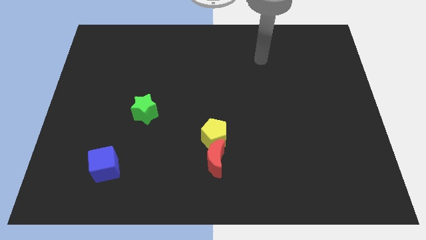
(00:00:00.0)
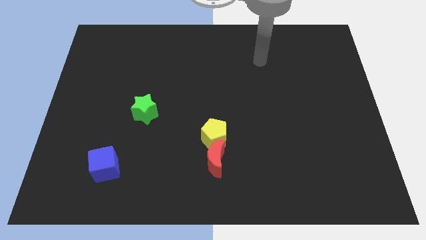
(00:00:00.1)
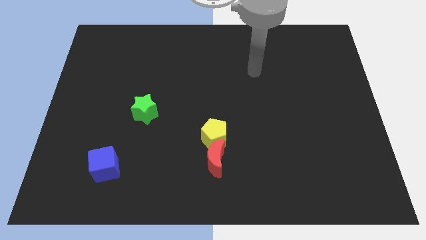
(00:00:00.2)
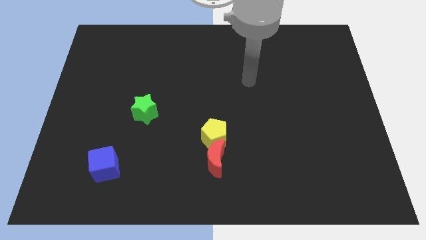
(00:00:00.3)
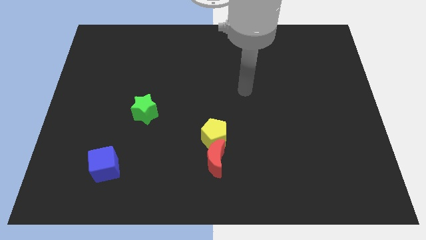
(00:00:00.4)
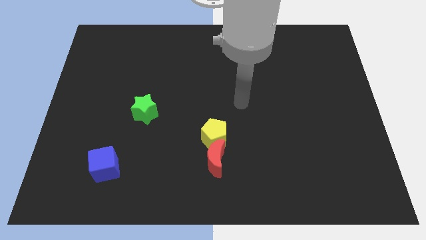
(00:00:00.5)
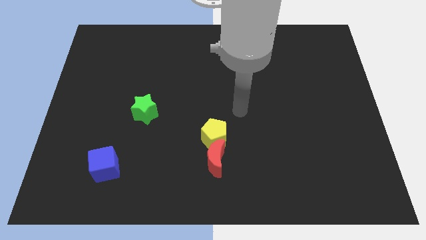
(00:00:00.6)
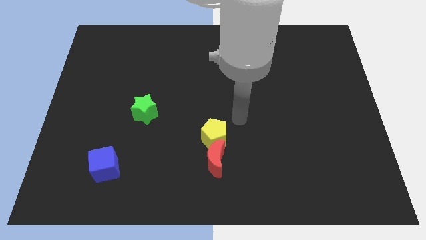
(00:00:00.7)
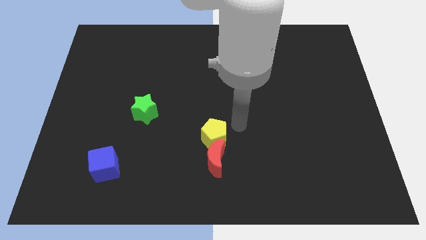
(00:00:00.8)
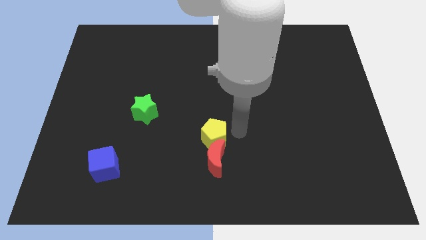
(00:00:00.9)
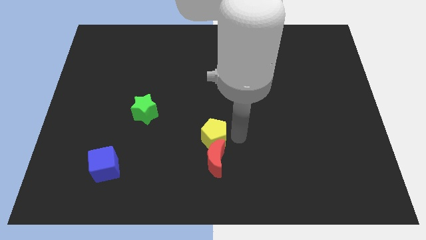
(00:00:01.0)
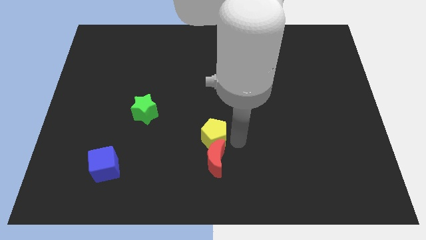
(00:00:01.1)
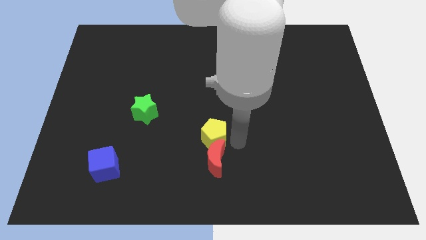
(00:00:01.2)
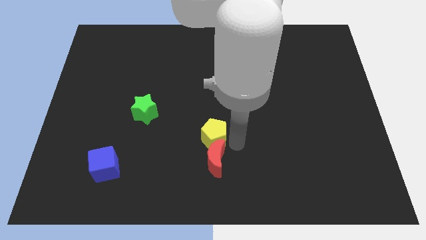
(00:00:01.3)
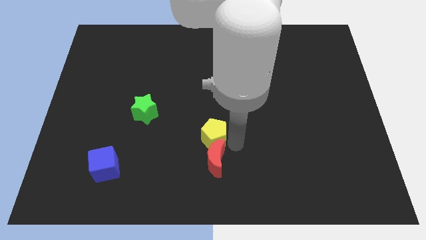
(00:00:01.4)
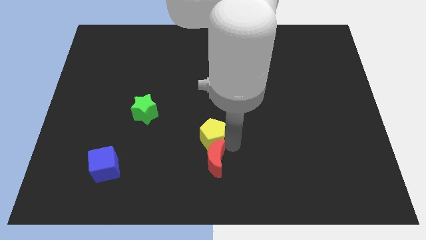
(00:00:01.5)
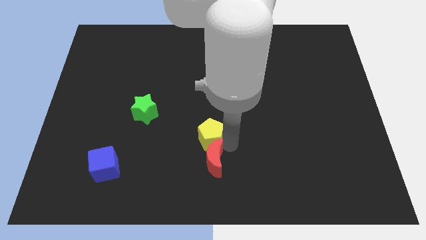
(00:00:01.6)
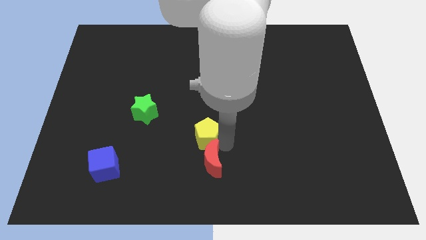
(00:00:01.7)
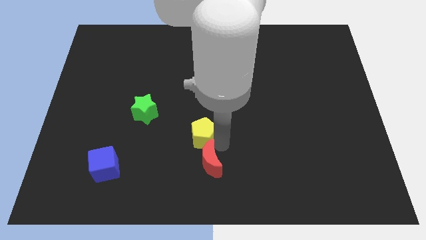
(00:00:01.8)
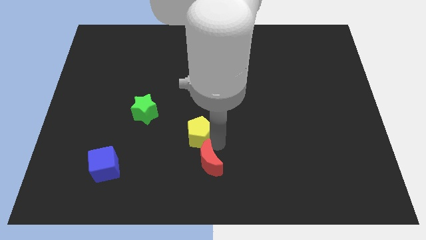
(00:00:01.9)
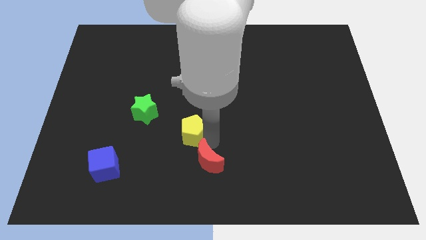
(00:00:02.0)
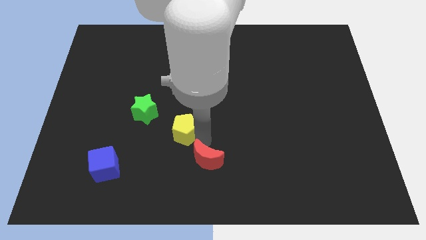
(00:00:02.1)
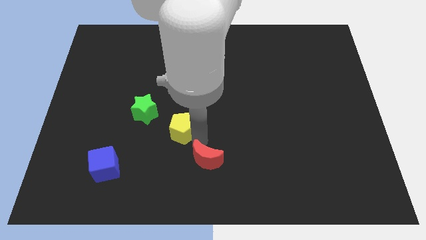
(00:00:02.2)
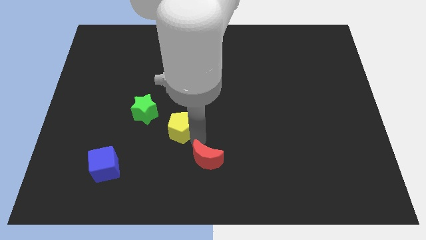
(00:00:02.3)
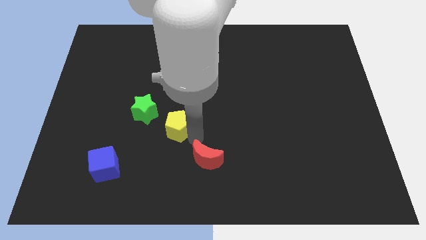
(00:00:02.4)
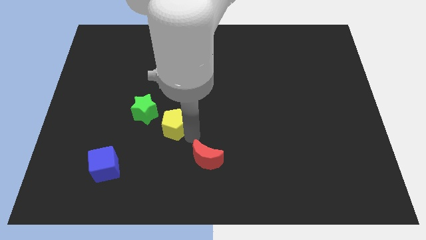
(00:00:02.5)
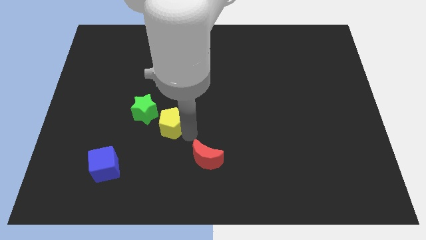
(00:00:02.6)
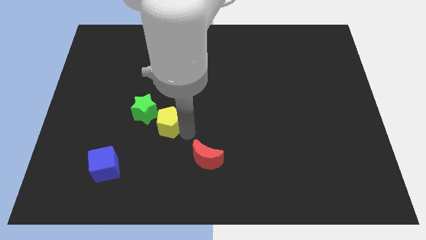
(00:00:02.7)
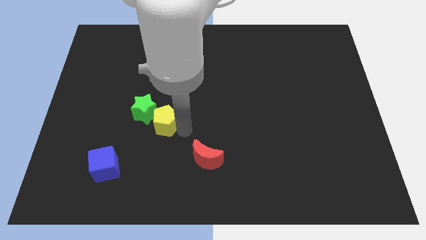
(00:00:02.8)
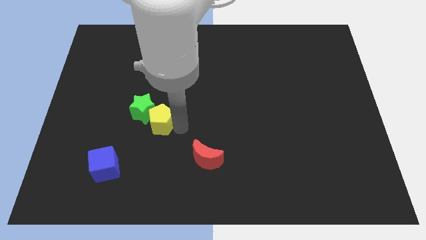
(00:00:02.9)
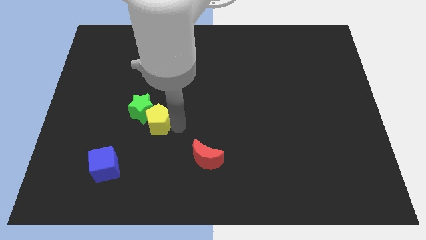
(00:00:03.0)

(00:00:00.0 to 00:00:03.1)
put the yellow block close to the green block

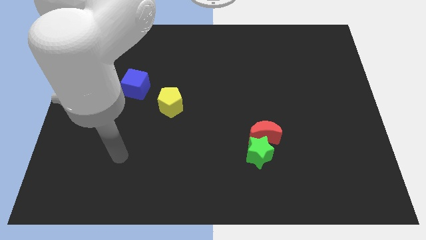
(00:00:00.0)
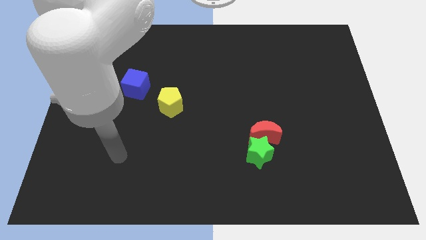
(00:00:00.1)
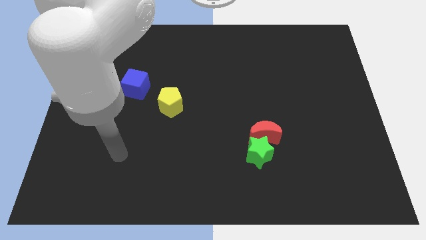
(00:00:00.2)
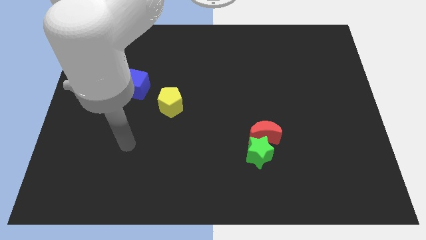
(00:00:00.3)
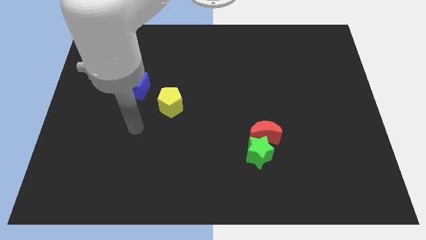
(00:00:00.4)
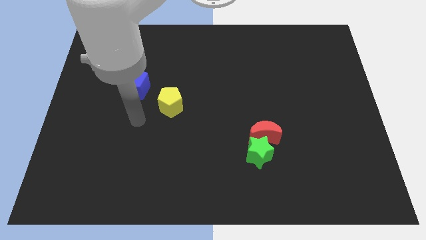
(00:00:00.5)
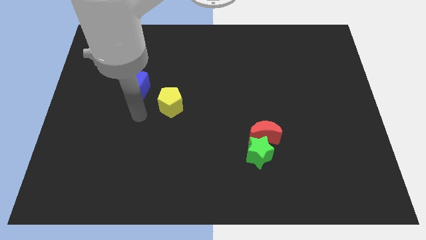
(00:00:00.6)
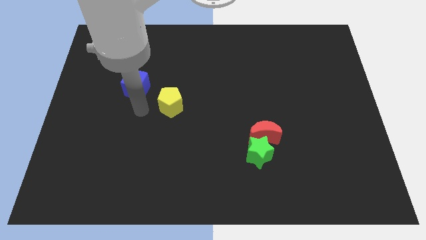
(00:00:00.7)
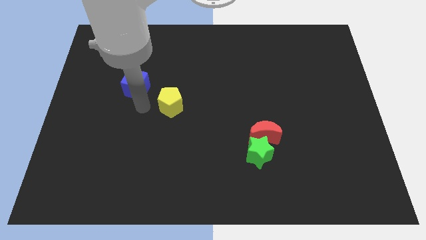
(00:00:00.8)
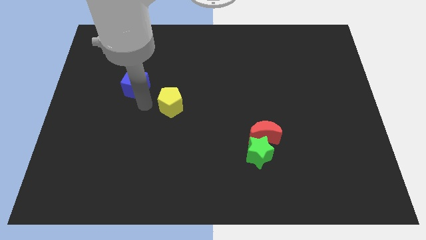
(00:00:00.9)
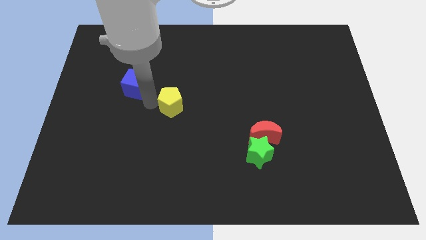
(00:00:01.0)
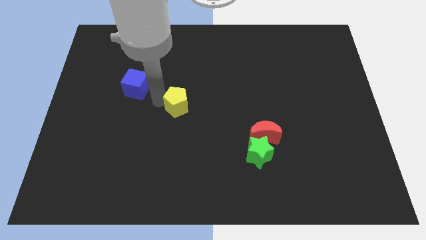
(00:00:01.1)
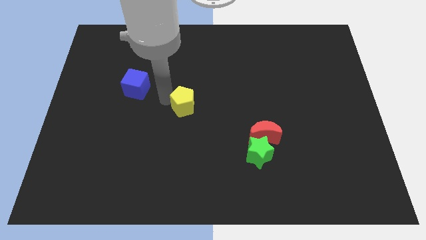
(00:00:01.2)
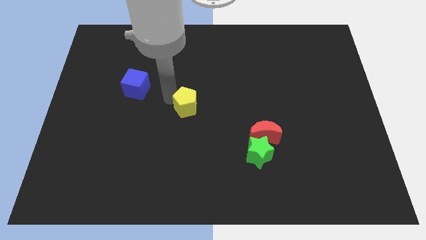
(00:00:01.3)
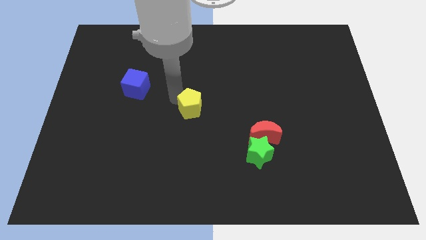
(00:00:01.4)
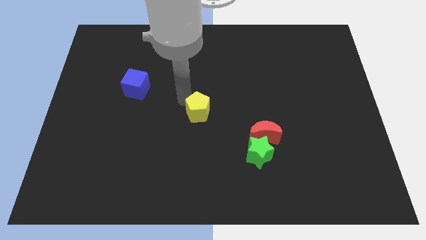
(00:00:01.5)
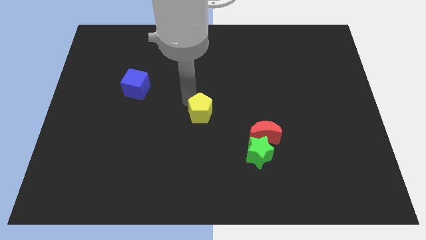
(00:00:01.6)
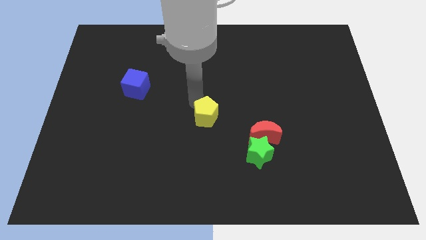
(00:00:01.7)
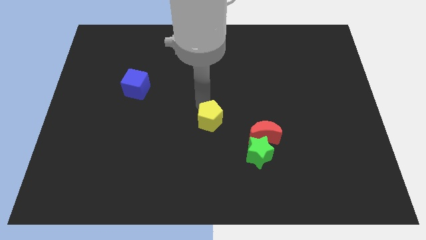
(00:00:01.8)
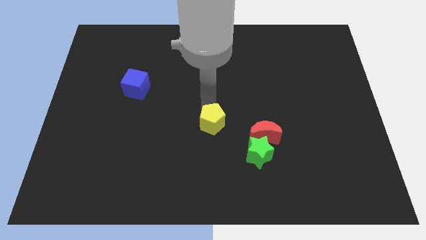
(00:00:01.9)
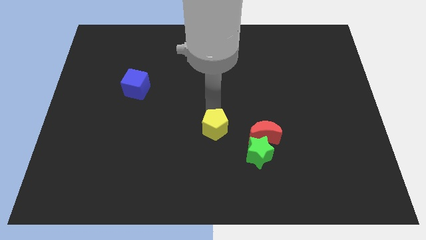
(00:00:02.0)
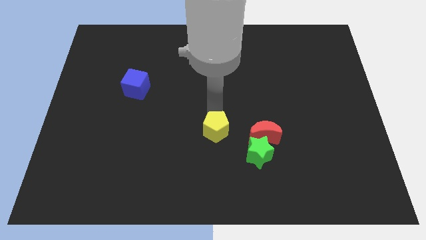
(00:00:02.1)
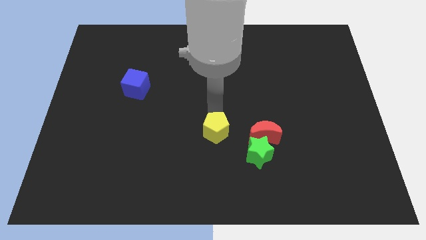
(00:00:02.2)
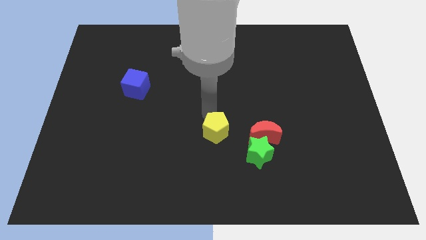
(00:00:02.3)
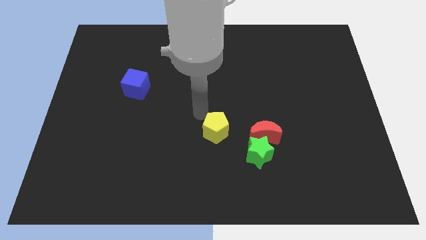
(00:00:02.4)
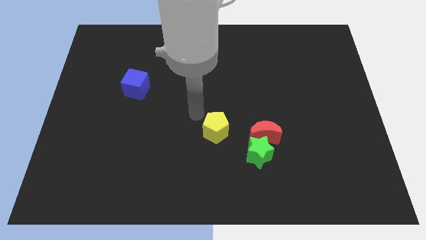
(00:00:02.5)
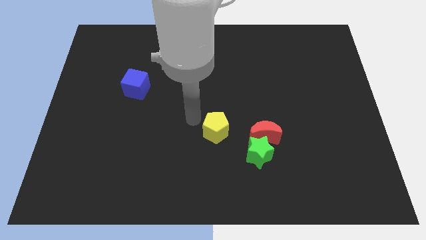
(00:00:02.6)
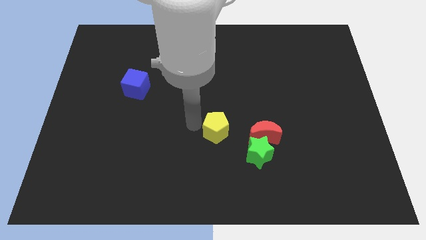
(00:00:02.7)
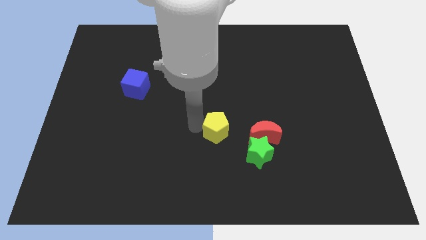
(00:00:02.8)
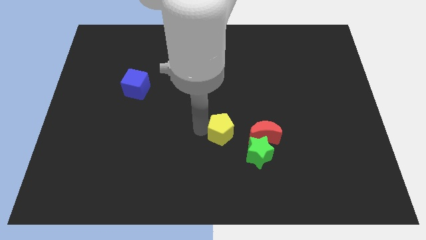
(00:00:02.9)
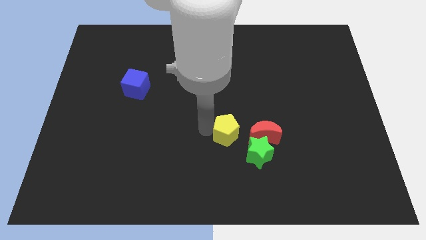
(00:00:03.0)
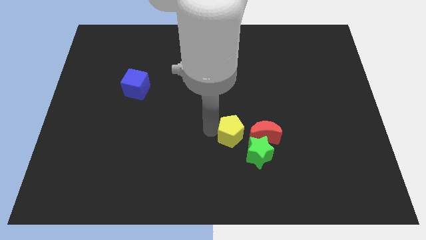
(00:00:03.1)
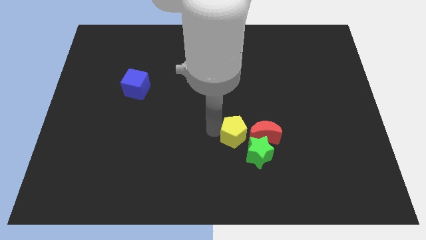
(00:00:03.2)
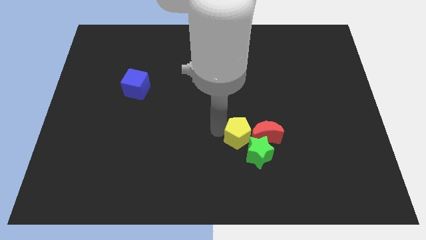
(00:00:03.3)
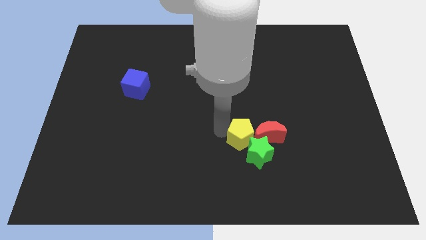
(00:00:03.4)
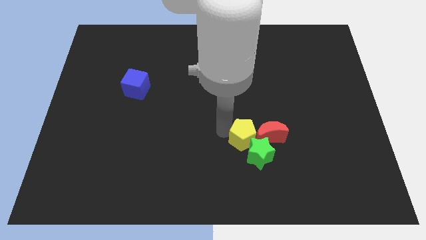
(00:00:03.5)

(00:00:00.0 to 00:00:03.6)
put the yellow pentagon close to the red moon

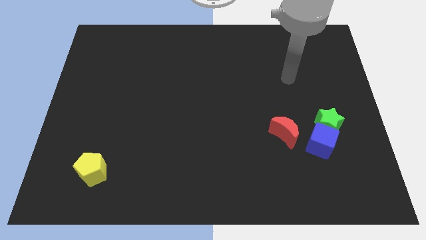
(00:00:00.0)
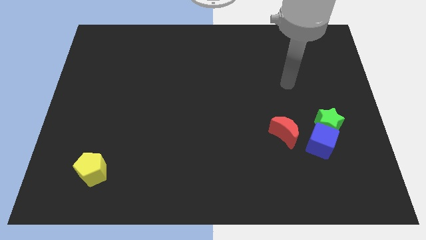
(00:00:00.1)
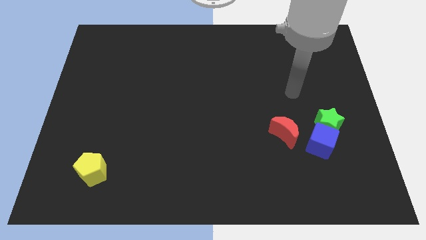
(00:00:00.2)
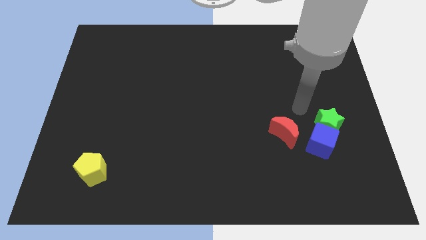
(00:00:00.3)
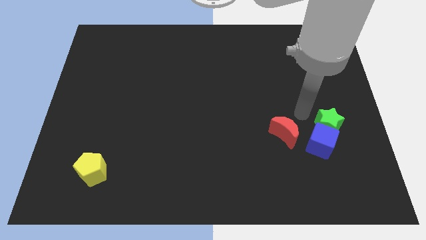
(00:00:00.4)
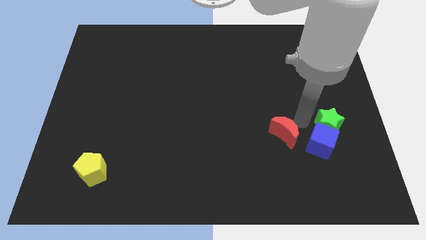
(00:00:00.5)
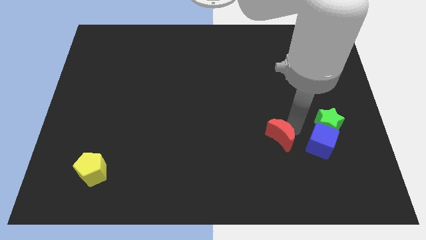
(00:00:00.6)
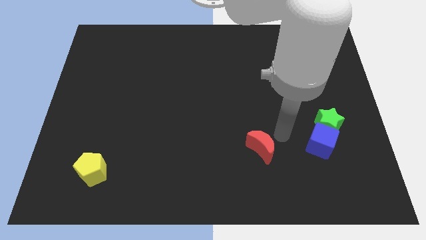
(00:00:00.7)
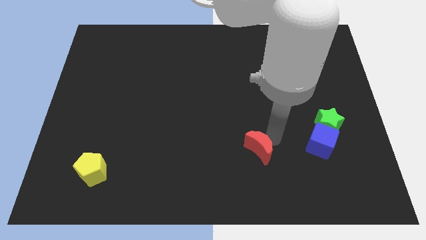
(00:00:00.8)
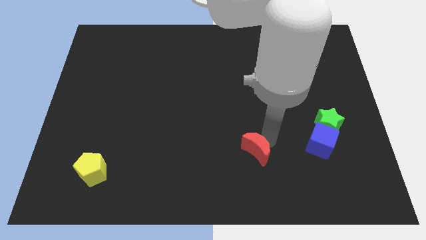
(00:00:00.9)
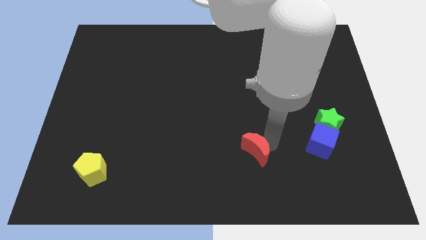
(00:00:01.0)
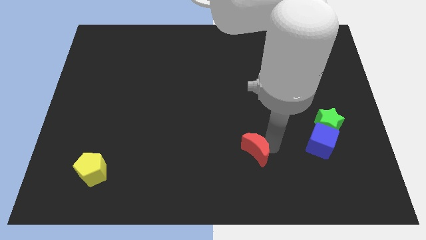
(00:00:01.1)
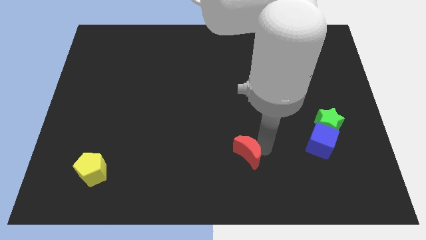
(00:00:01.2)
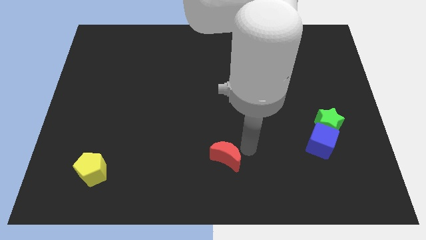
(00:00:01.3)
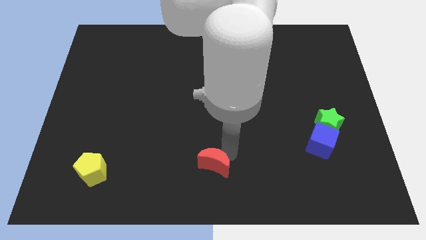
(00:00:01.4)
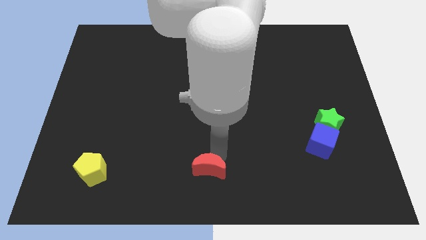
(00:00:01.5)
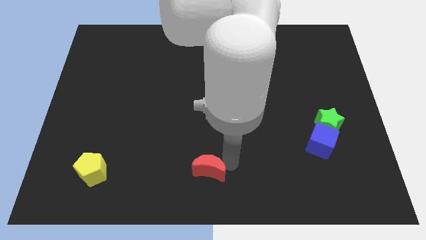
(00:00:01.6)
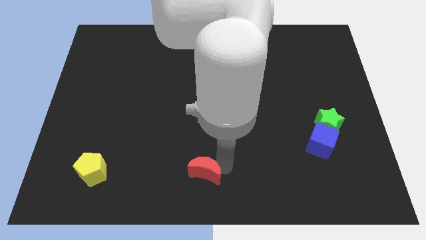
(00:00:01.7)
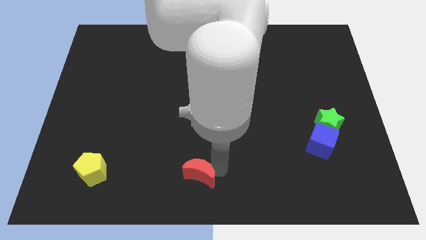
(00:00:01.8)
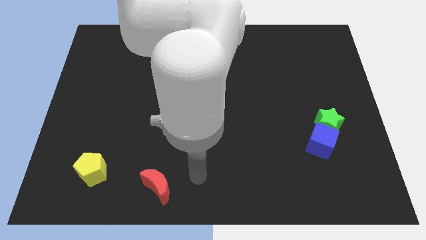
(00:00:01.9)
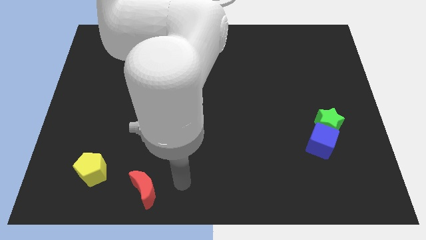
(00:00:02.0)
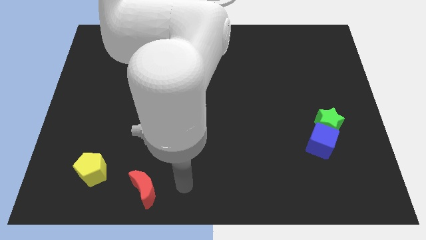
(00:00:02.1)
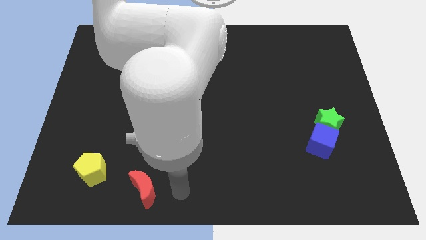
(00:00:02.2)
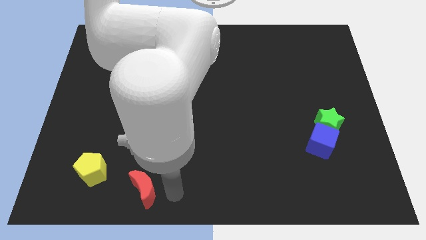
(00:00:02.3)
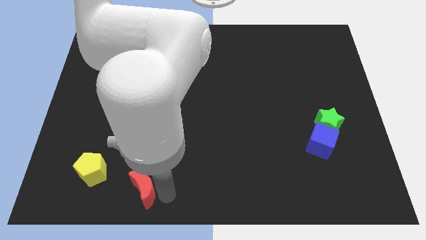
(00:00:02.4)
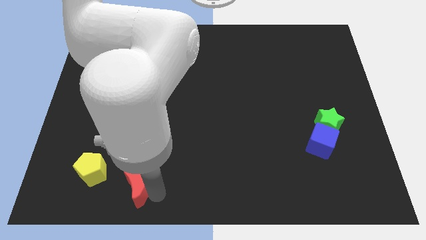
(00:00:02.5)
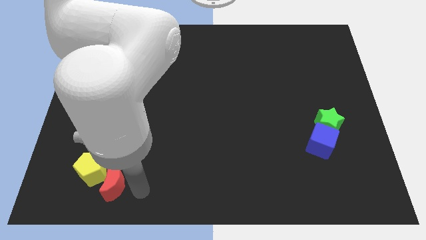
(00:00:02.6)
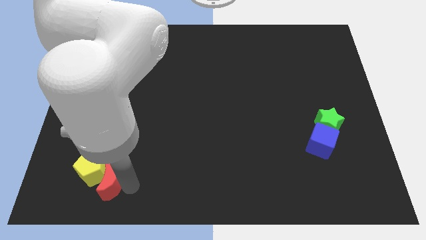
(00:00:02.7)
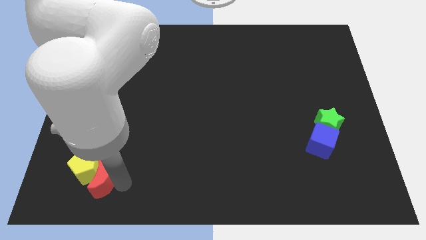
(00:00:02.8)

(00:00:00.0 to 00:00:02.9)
push the red block to the pentagon
